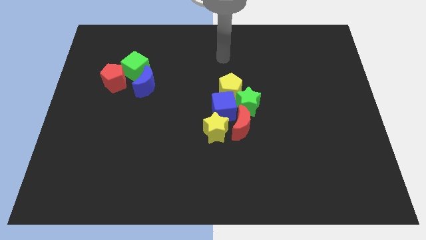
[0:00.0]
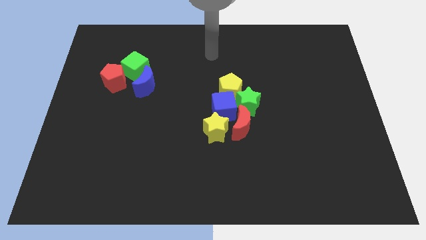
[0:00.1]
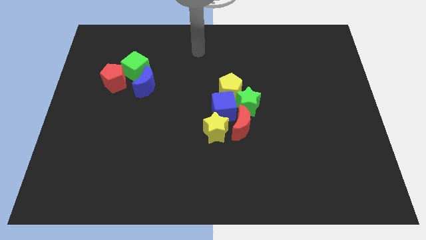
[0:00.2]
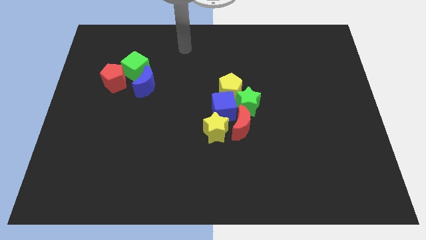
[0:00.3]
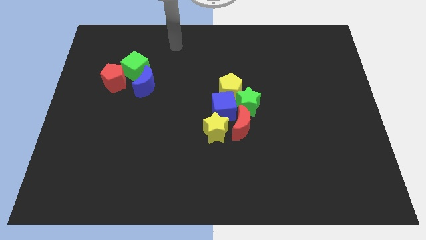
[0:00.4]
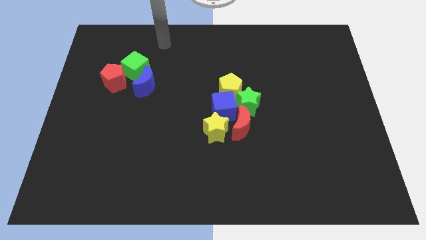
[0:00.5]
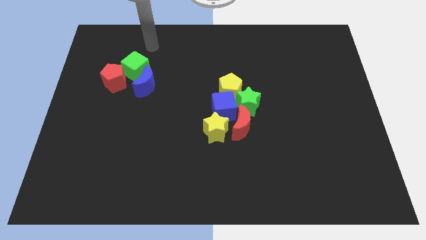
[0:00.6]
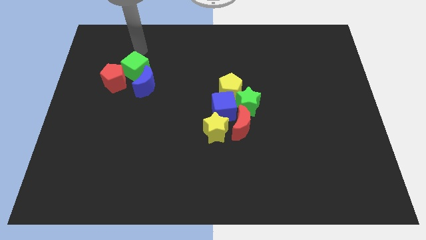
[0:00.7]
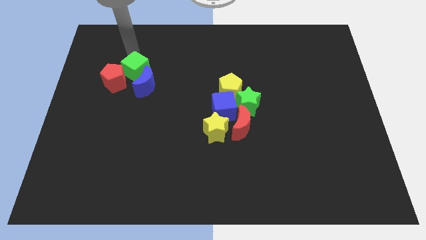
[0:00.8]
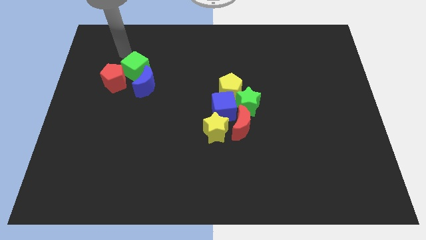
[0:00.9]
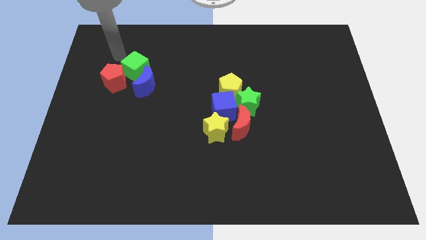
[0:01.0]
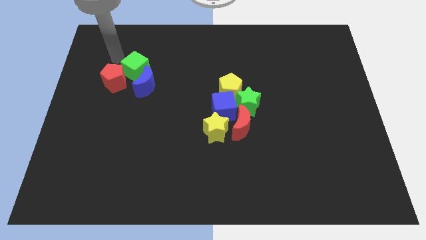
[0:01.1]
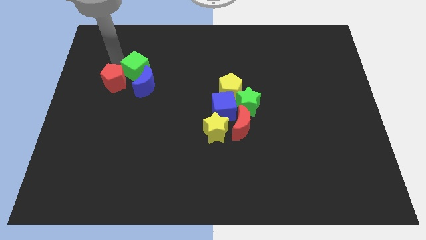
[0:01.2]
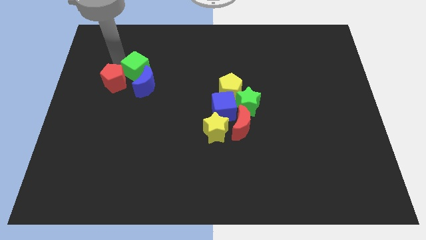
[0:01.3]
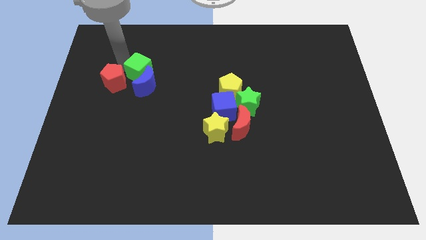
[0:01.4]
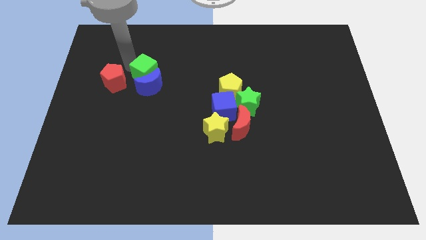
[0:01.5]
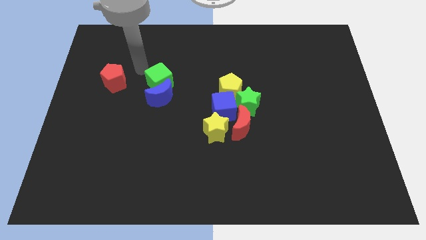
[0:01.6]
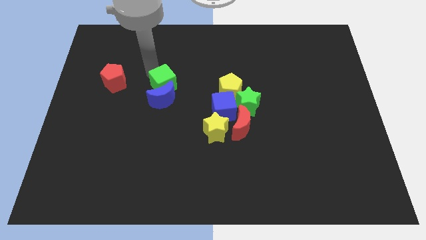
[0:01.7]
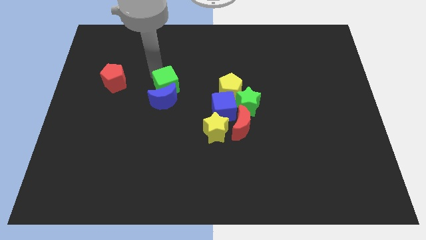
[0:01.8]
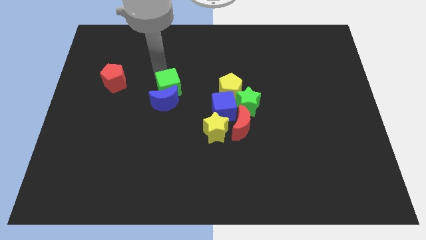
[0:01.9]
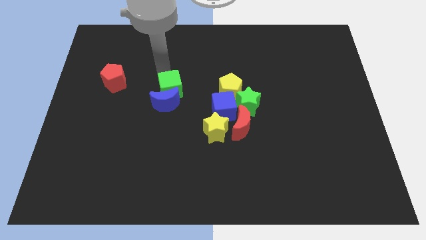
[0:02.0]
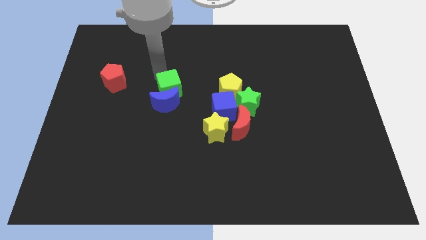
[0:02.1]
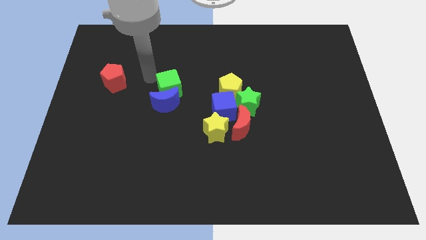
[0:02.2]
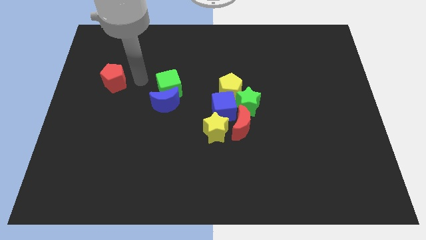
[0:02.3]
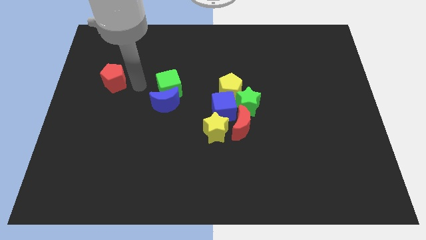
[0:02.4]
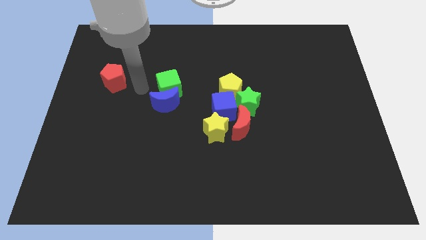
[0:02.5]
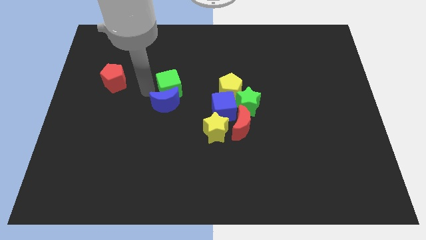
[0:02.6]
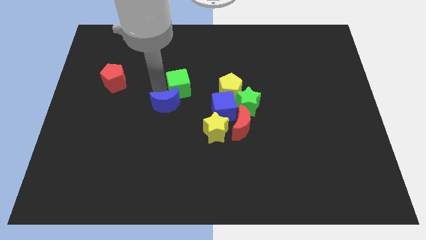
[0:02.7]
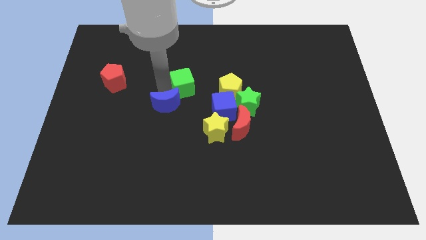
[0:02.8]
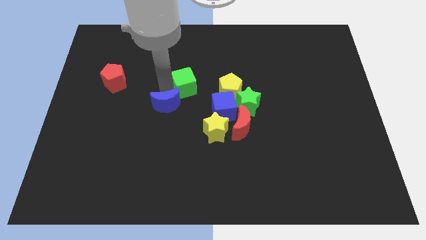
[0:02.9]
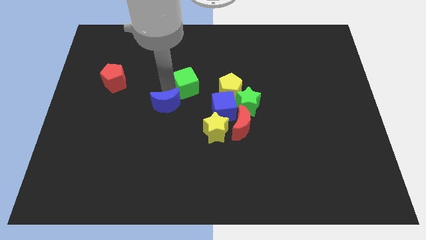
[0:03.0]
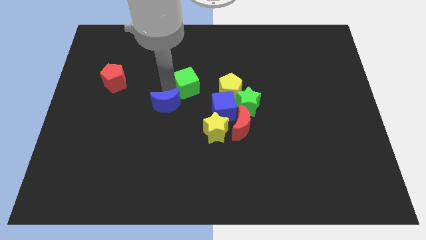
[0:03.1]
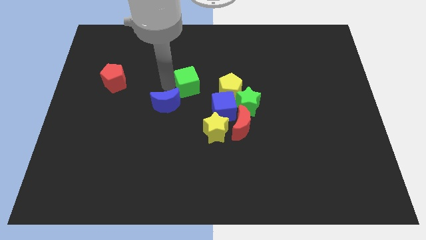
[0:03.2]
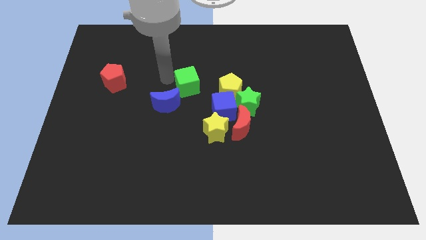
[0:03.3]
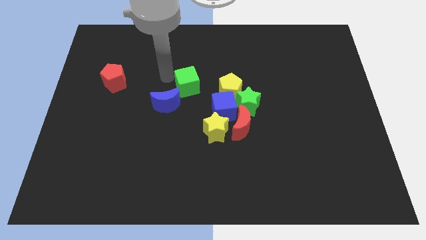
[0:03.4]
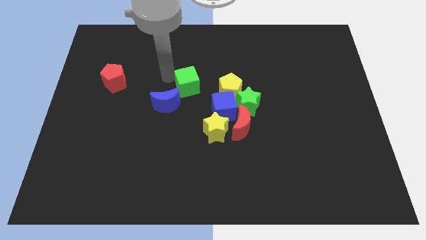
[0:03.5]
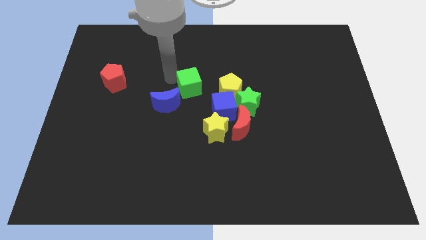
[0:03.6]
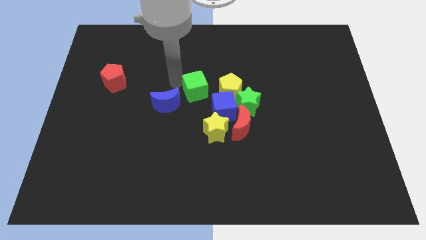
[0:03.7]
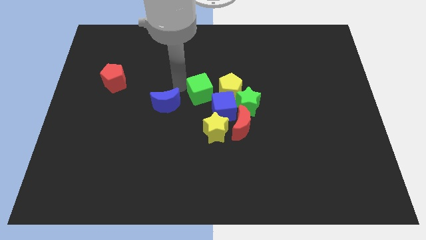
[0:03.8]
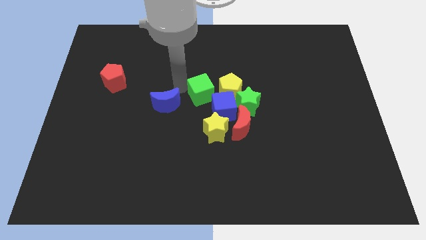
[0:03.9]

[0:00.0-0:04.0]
move green cube to the left of yellow pentagon

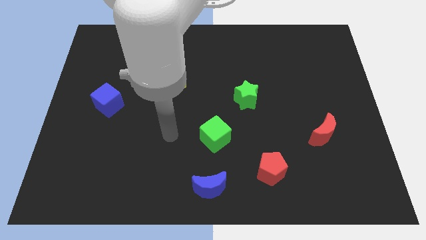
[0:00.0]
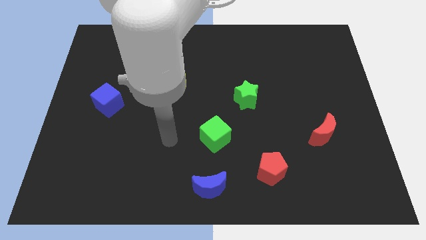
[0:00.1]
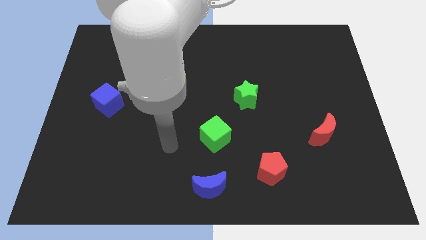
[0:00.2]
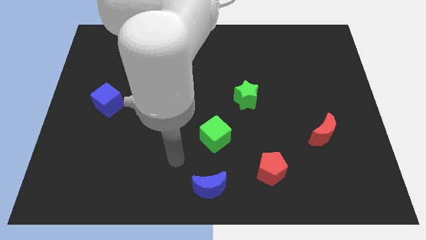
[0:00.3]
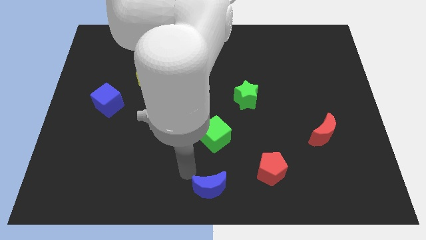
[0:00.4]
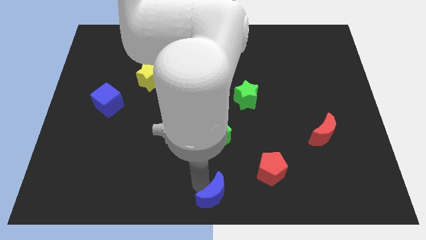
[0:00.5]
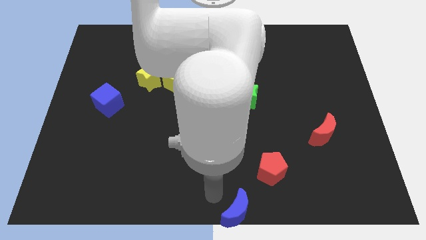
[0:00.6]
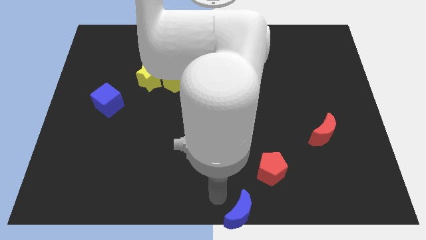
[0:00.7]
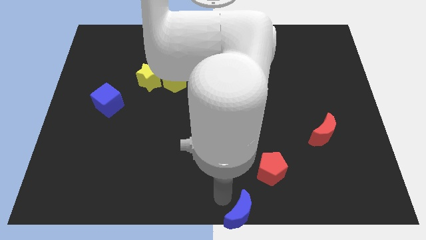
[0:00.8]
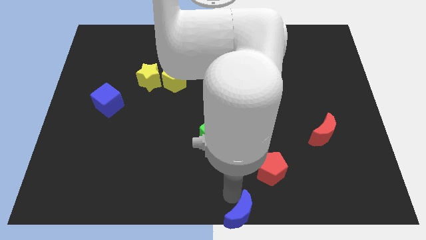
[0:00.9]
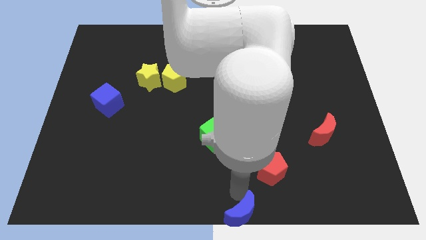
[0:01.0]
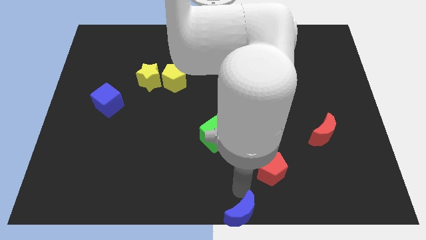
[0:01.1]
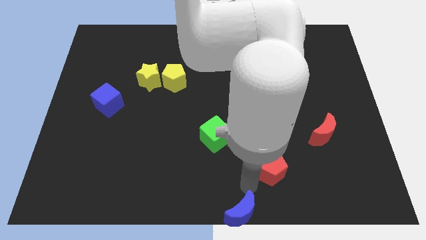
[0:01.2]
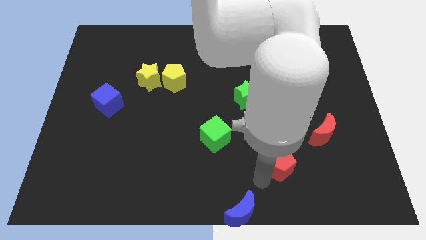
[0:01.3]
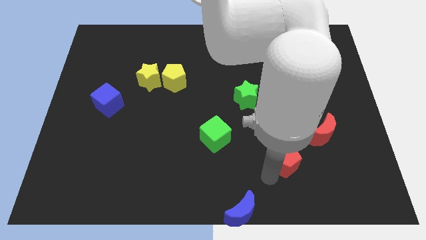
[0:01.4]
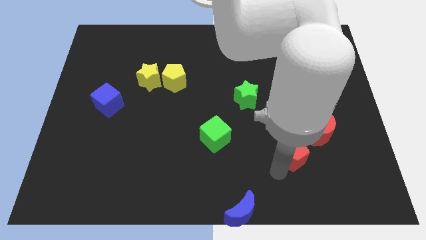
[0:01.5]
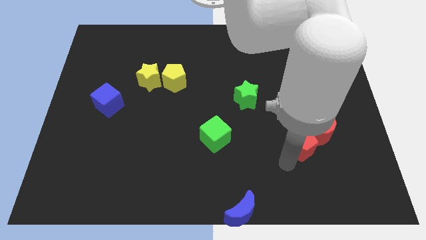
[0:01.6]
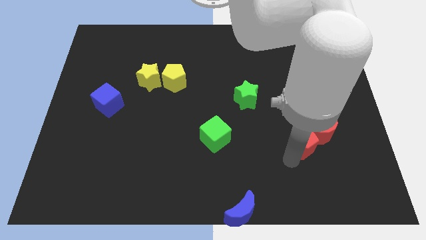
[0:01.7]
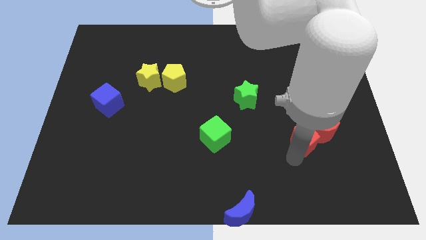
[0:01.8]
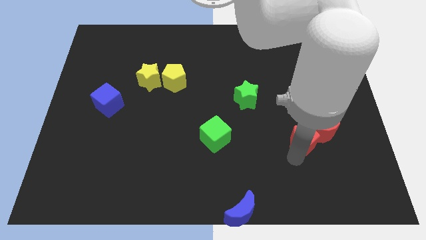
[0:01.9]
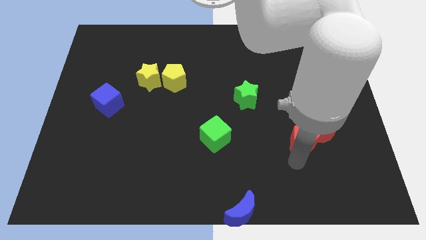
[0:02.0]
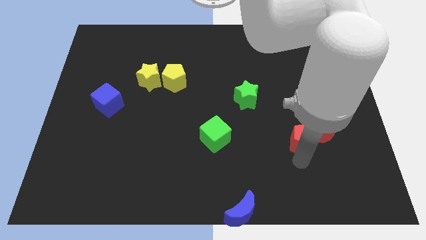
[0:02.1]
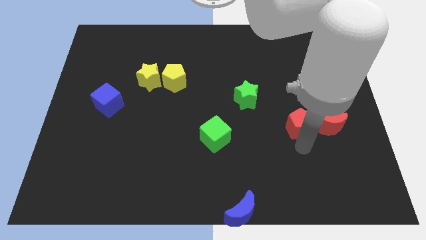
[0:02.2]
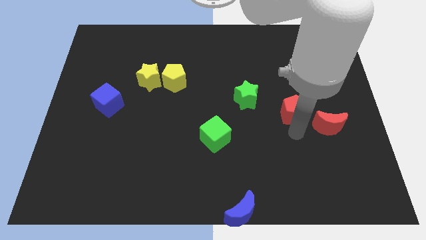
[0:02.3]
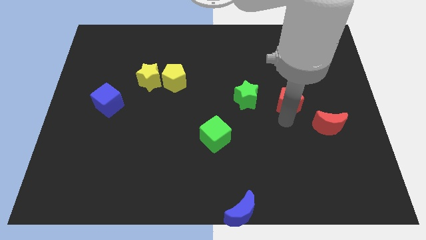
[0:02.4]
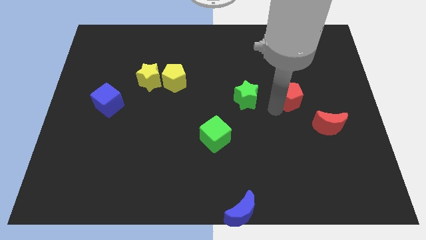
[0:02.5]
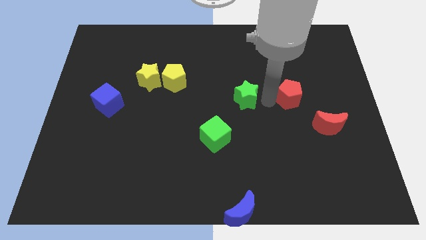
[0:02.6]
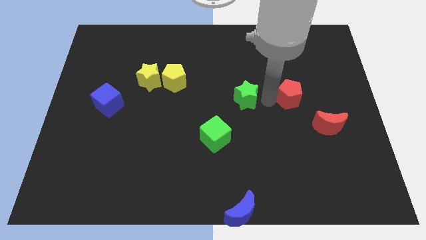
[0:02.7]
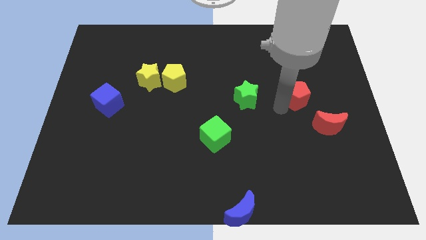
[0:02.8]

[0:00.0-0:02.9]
push the blue moon to the bottom and move the red pentagon to the right of green star

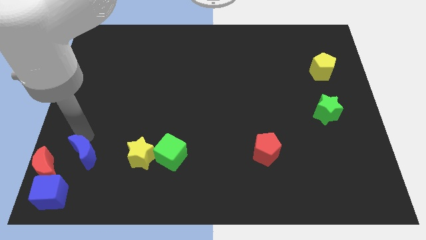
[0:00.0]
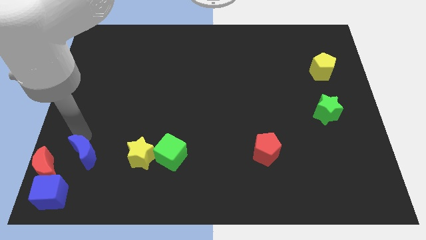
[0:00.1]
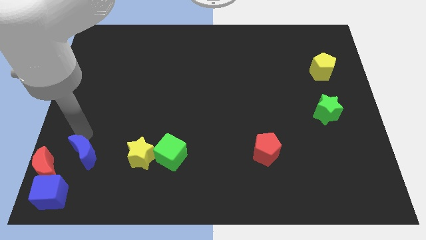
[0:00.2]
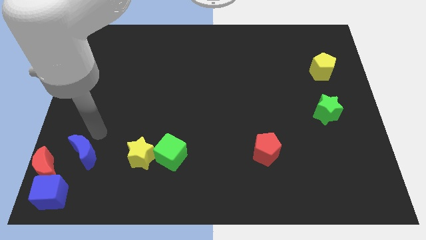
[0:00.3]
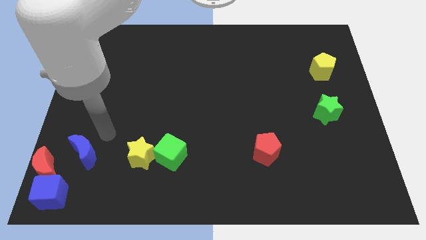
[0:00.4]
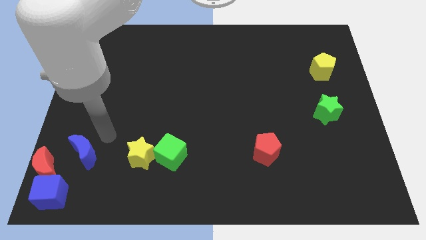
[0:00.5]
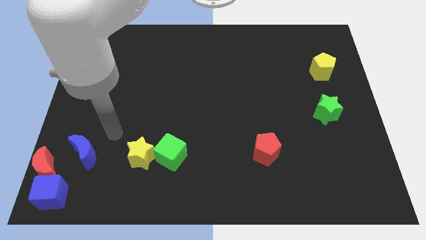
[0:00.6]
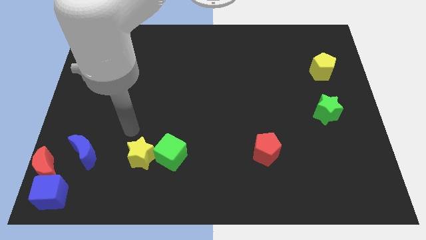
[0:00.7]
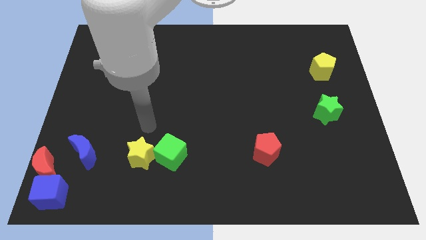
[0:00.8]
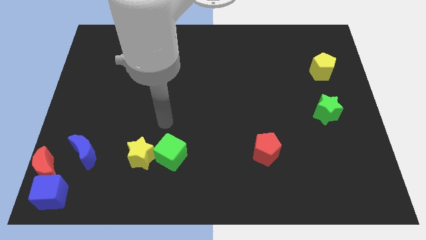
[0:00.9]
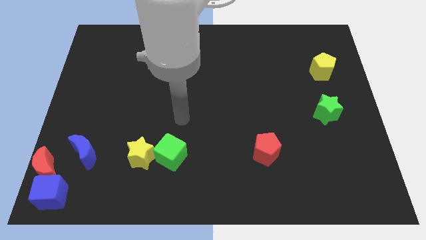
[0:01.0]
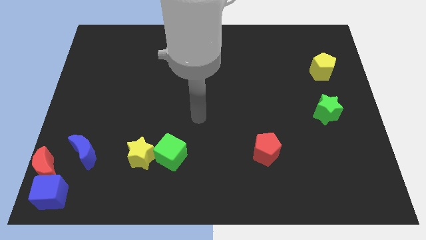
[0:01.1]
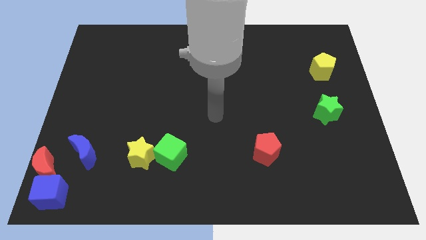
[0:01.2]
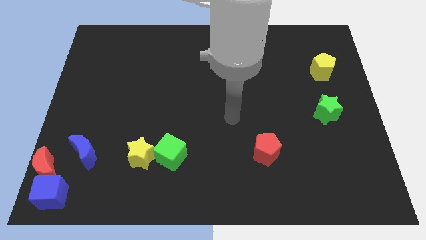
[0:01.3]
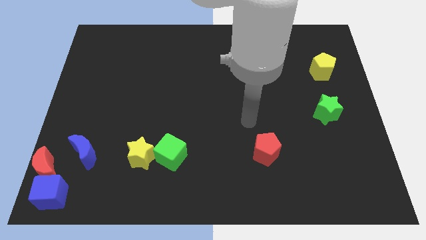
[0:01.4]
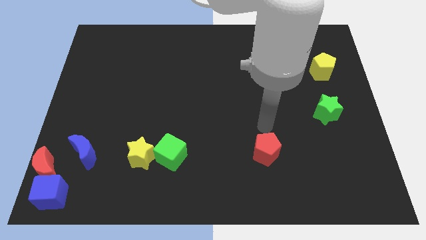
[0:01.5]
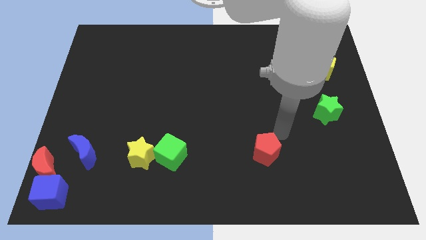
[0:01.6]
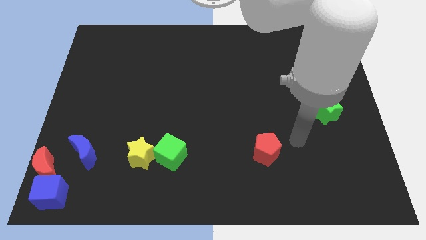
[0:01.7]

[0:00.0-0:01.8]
move your arm to the top of the red pentagon

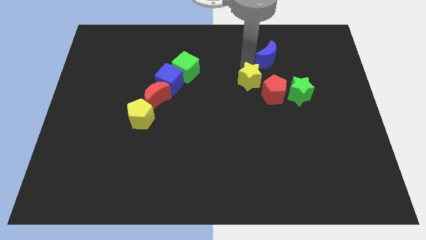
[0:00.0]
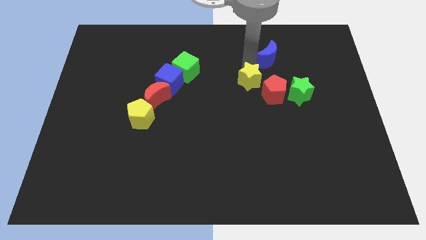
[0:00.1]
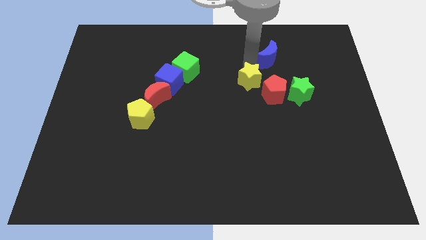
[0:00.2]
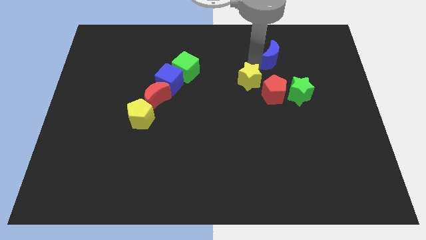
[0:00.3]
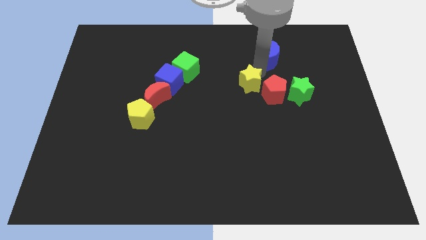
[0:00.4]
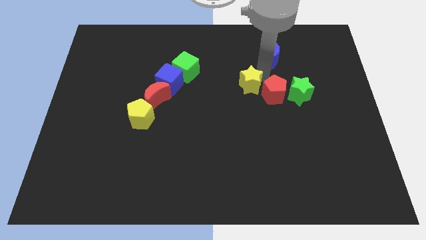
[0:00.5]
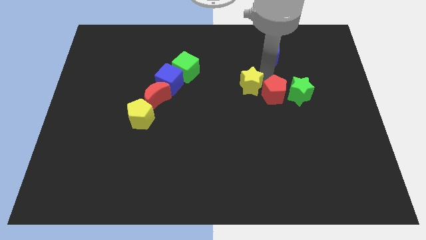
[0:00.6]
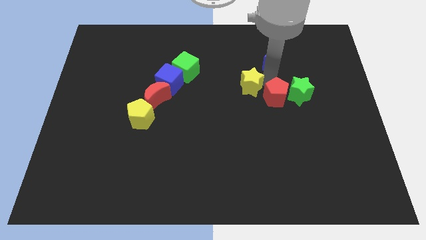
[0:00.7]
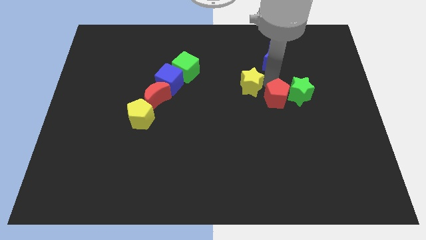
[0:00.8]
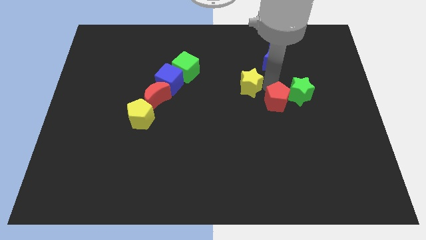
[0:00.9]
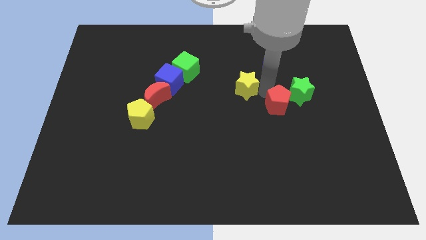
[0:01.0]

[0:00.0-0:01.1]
slightly push the yellow star away from the blue crescent
